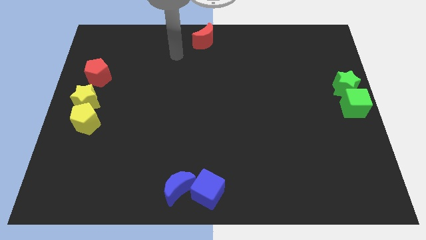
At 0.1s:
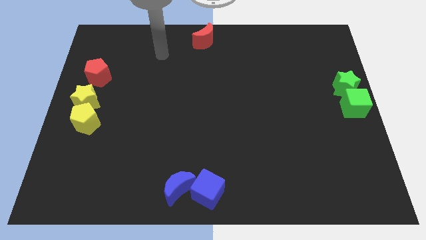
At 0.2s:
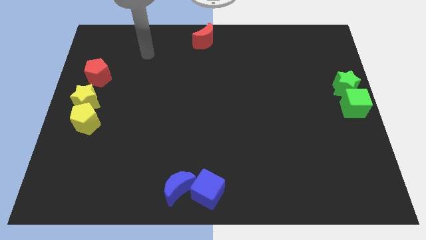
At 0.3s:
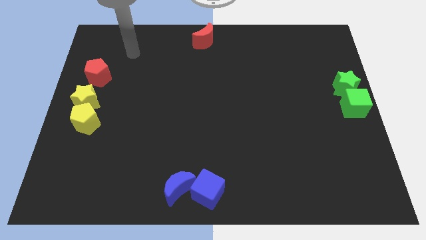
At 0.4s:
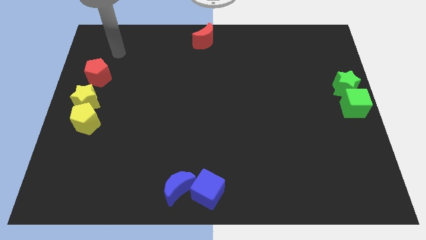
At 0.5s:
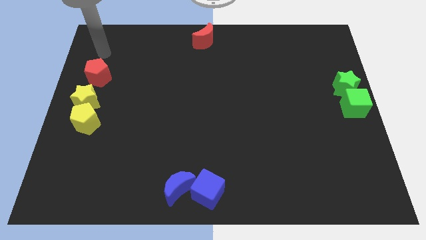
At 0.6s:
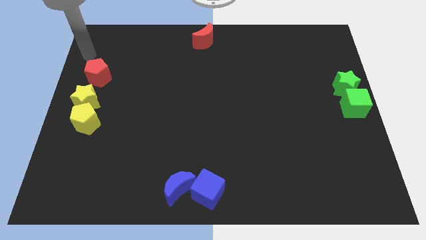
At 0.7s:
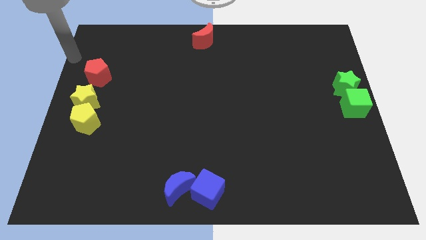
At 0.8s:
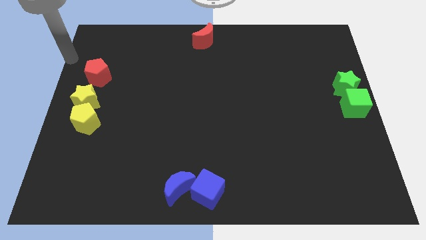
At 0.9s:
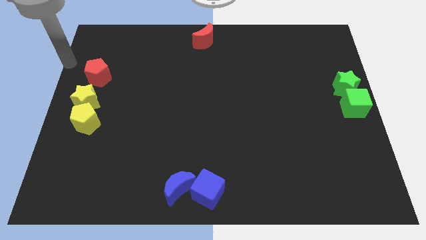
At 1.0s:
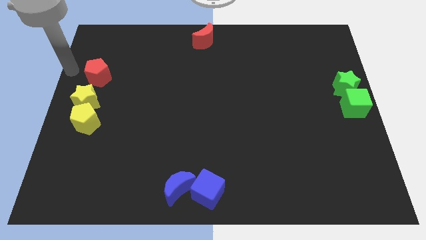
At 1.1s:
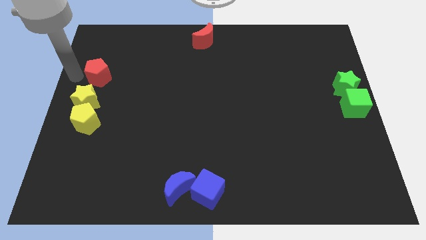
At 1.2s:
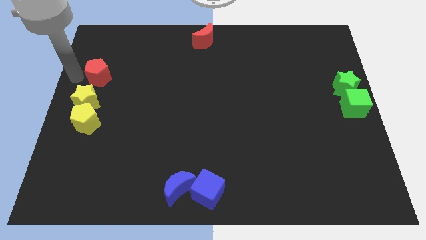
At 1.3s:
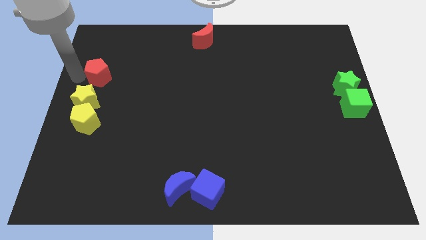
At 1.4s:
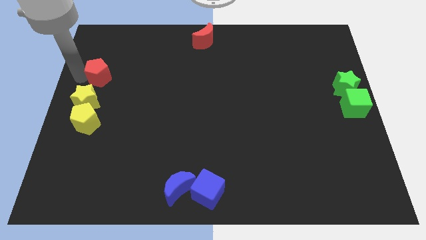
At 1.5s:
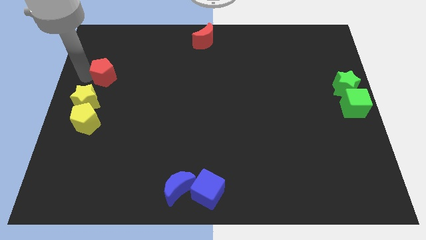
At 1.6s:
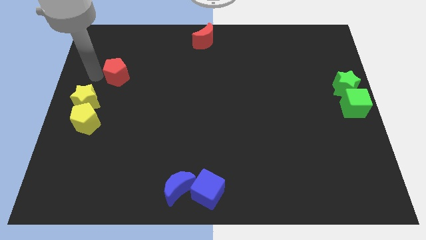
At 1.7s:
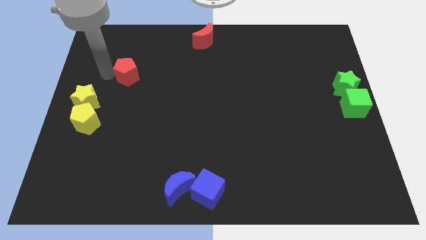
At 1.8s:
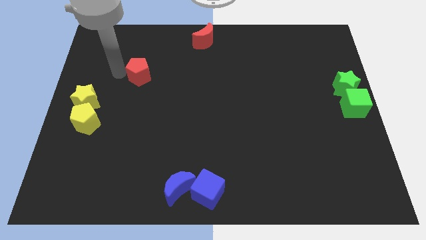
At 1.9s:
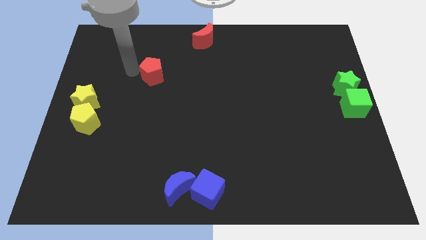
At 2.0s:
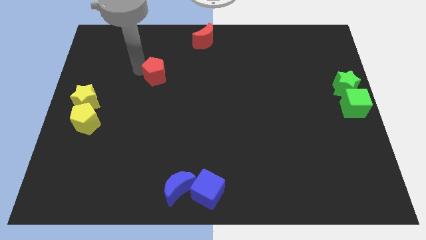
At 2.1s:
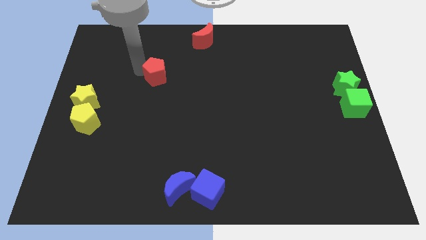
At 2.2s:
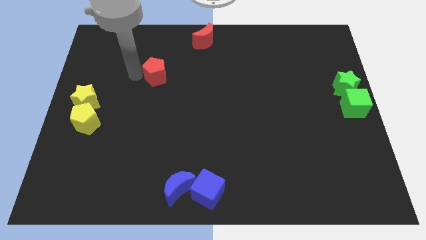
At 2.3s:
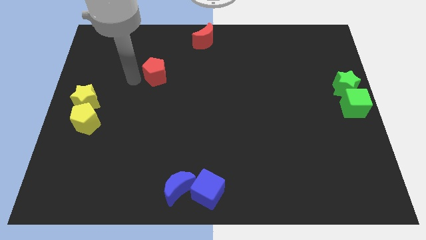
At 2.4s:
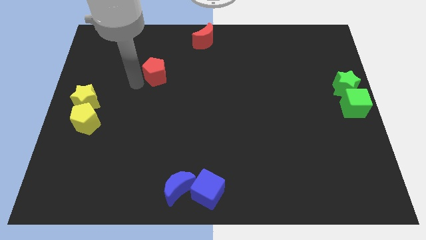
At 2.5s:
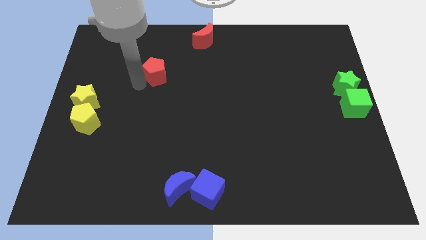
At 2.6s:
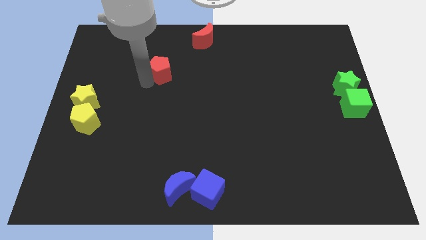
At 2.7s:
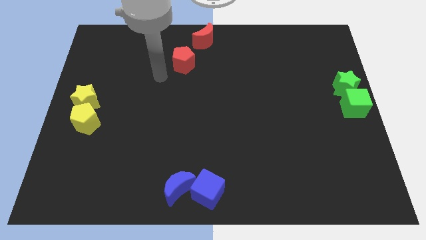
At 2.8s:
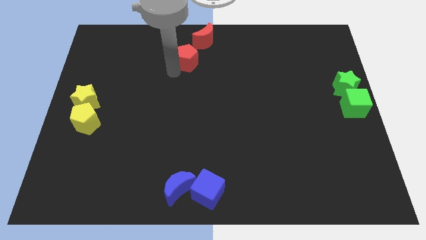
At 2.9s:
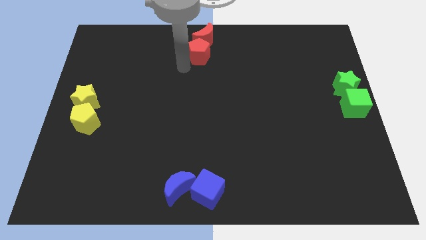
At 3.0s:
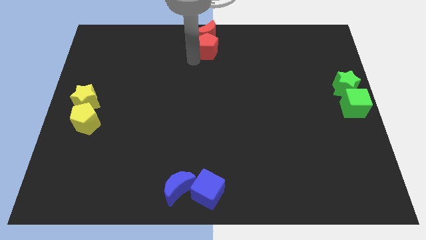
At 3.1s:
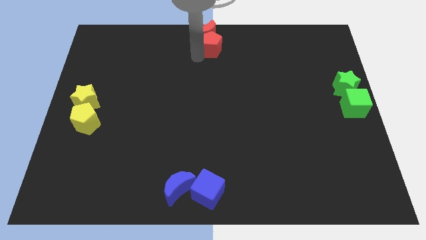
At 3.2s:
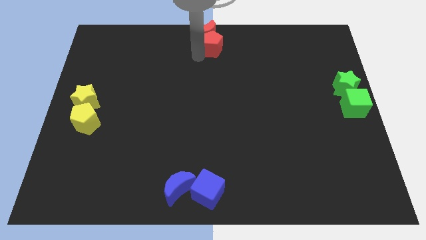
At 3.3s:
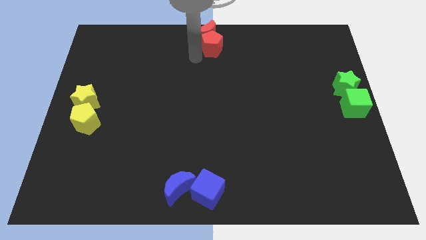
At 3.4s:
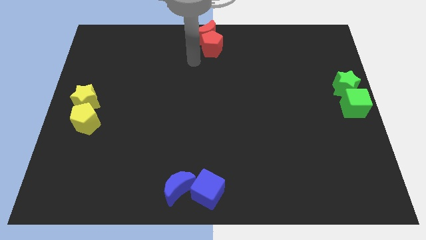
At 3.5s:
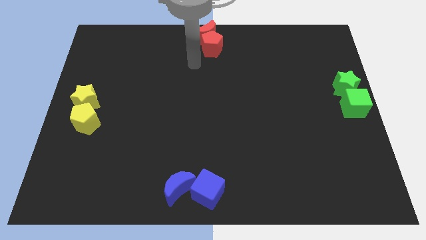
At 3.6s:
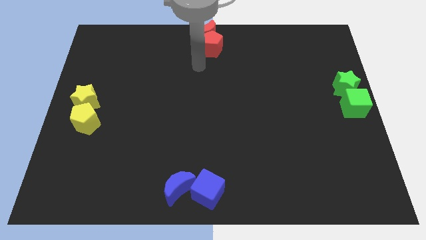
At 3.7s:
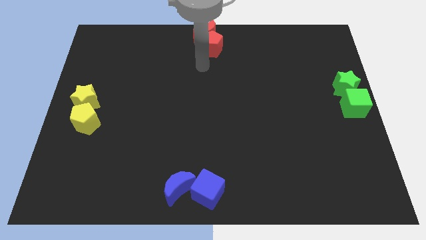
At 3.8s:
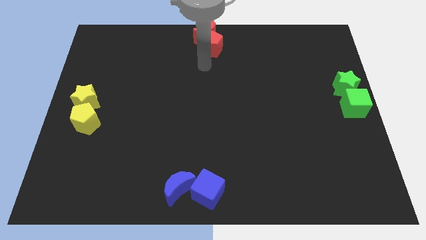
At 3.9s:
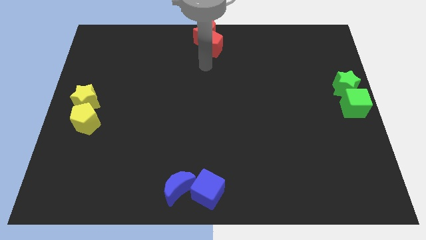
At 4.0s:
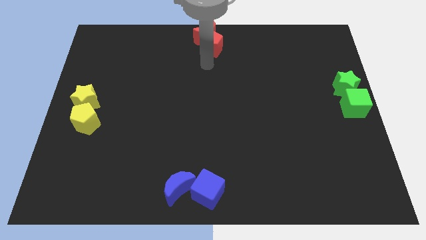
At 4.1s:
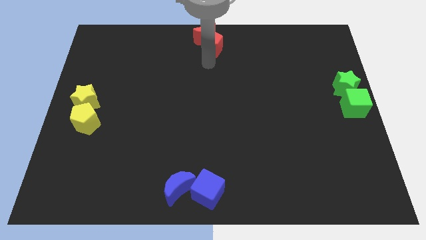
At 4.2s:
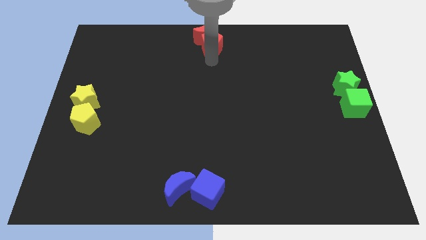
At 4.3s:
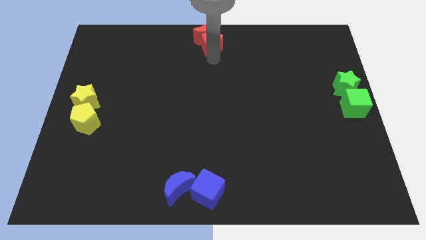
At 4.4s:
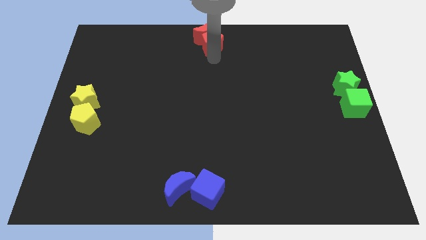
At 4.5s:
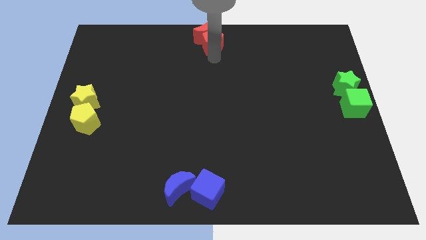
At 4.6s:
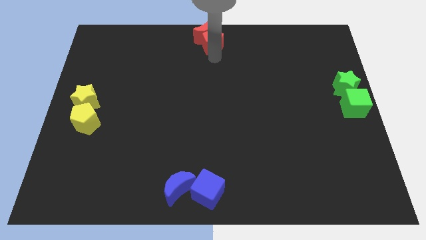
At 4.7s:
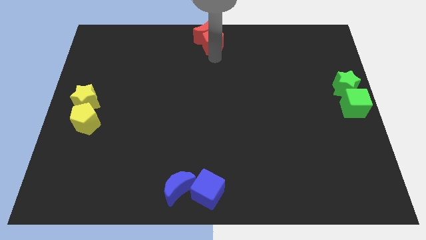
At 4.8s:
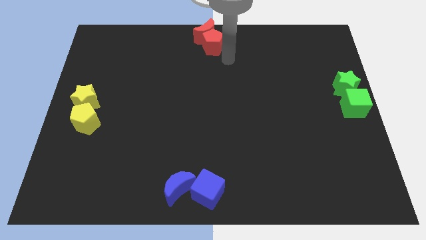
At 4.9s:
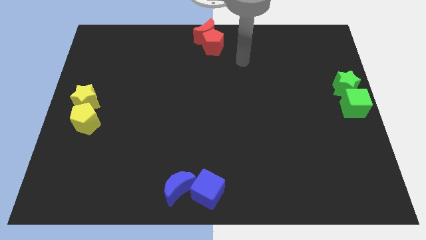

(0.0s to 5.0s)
move the yellow pentagon below the red crescent

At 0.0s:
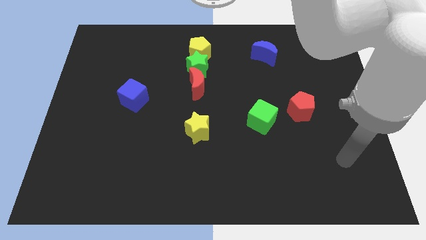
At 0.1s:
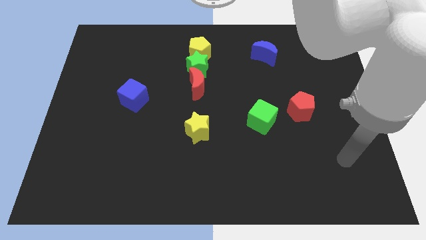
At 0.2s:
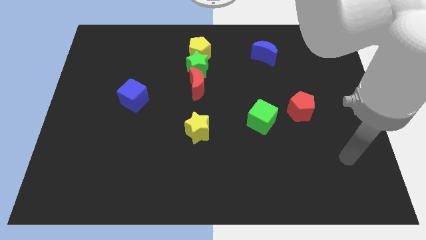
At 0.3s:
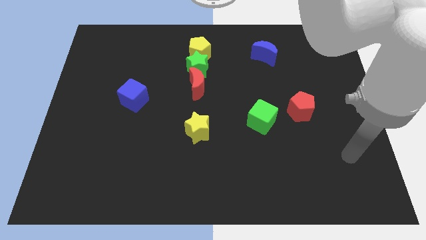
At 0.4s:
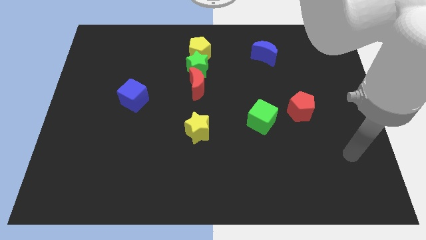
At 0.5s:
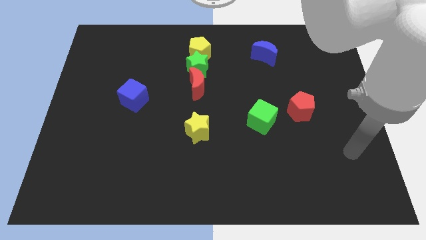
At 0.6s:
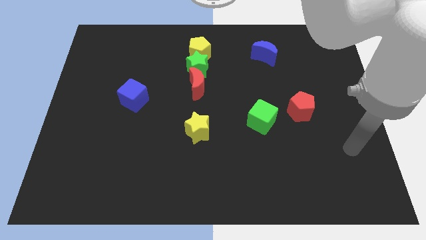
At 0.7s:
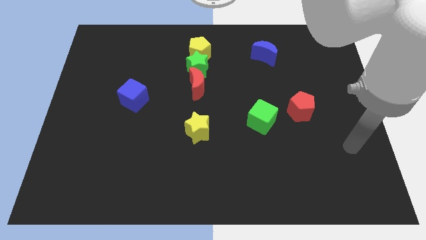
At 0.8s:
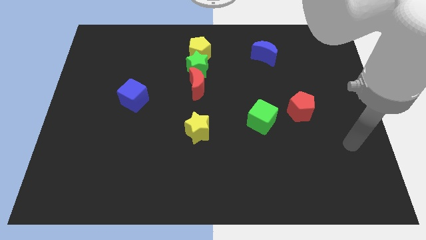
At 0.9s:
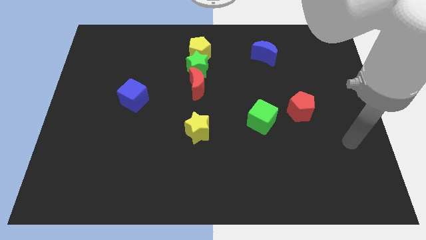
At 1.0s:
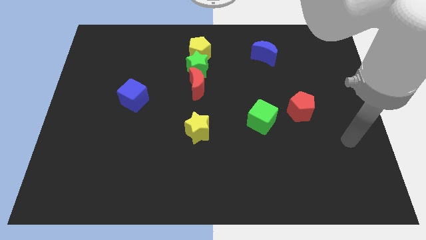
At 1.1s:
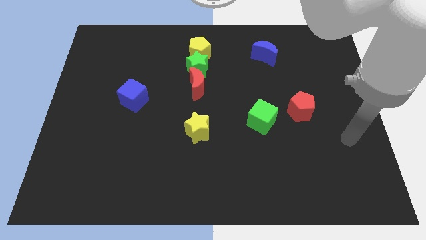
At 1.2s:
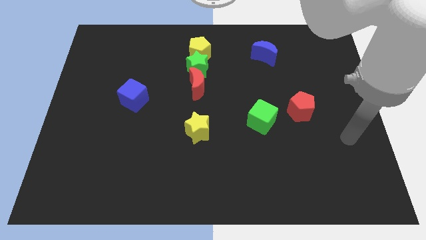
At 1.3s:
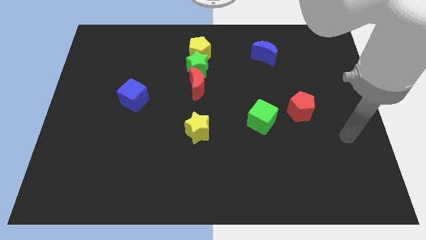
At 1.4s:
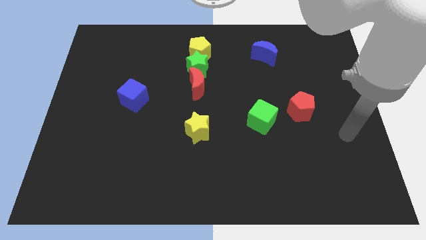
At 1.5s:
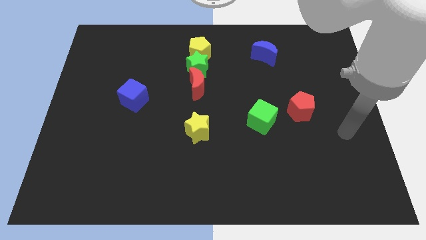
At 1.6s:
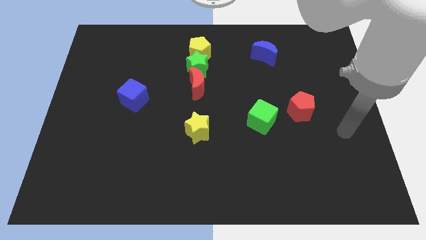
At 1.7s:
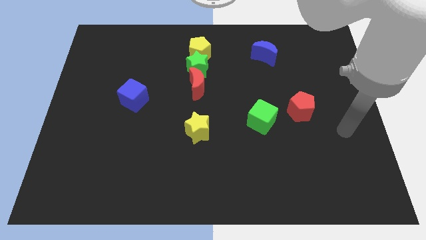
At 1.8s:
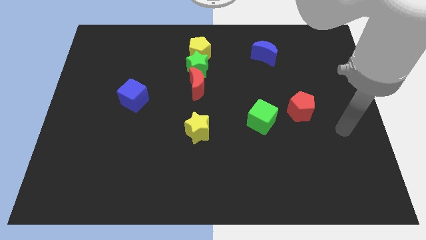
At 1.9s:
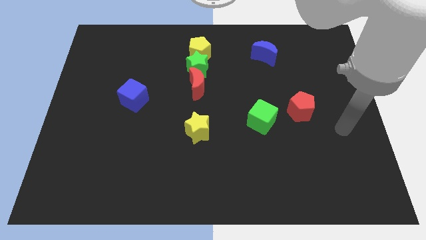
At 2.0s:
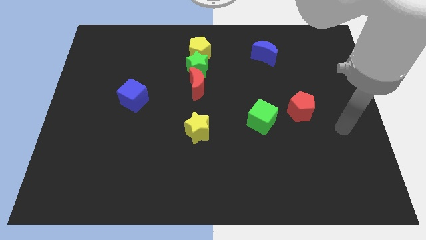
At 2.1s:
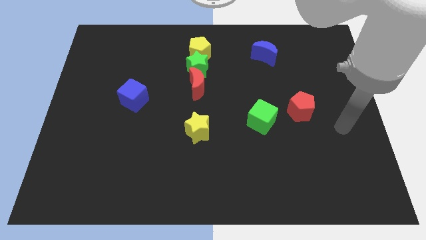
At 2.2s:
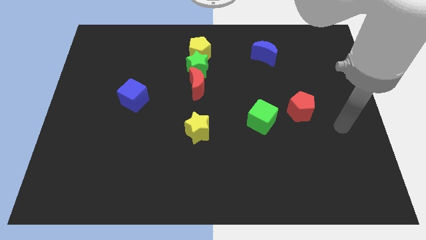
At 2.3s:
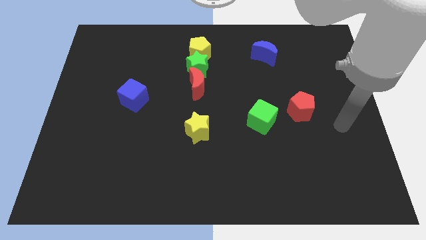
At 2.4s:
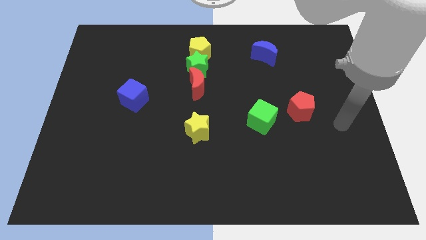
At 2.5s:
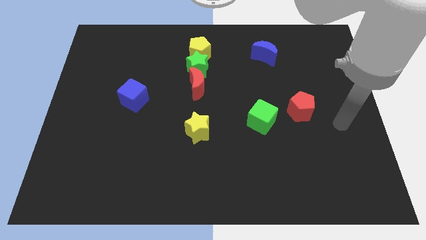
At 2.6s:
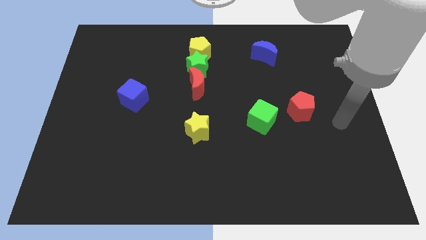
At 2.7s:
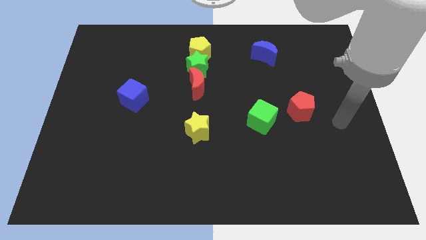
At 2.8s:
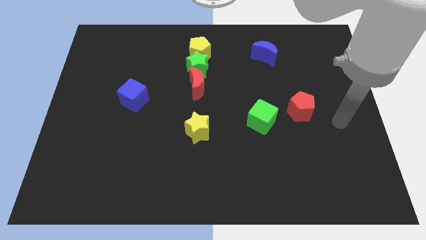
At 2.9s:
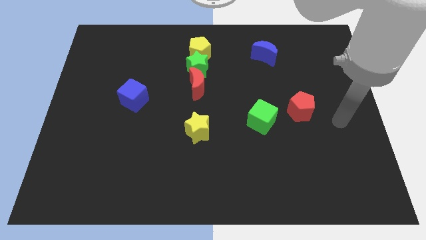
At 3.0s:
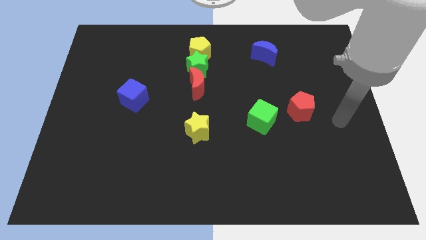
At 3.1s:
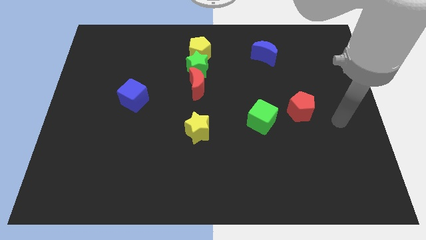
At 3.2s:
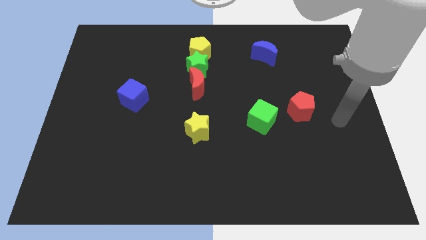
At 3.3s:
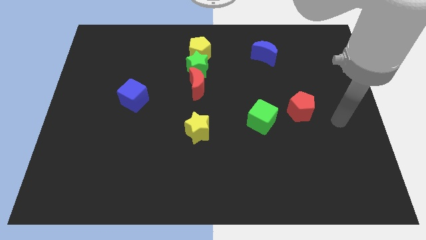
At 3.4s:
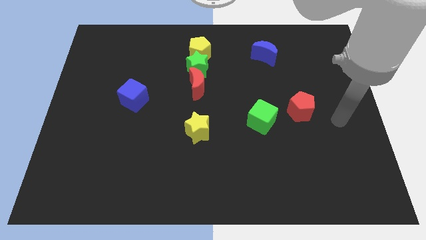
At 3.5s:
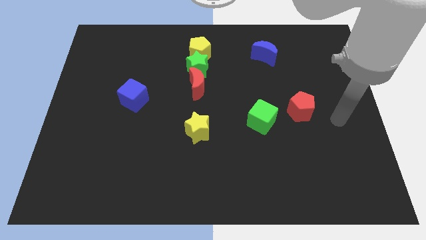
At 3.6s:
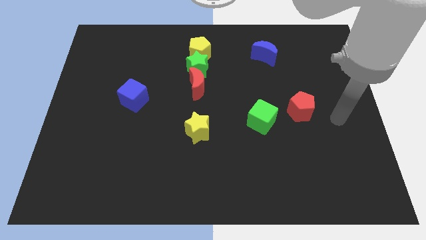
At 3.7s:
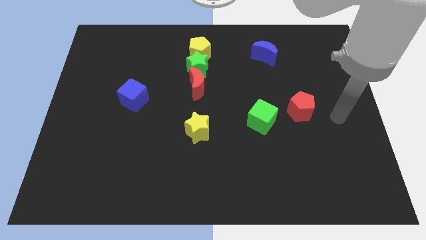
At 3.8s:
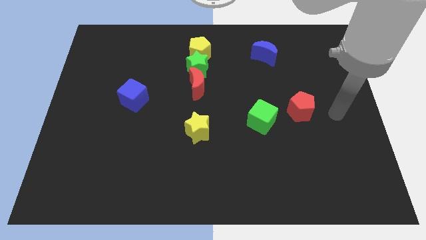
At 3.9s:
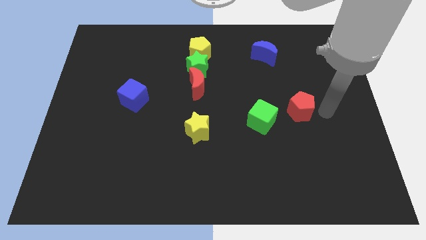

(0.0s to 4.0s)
move arm near red pentagon
